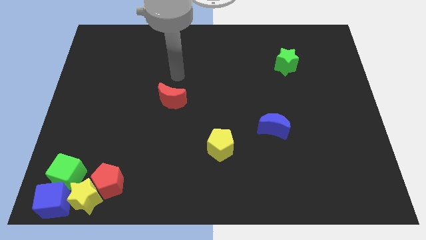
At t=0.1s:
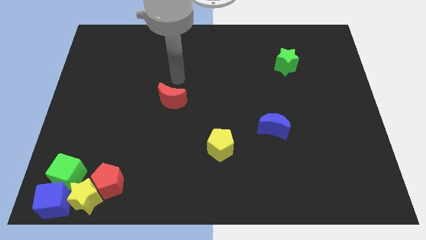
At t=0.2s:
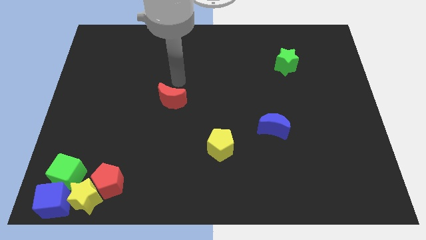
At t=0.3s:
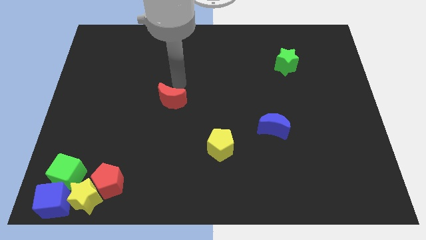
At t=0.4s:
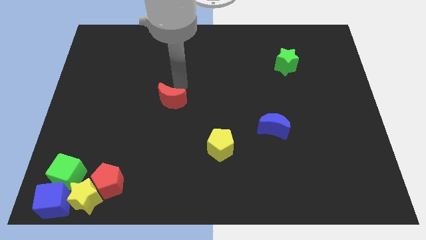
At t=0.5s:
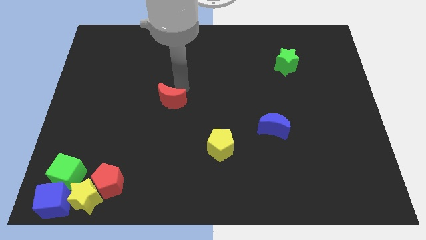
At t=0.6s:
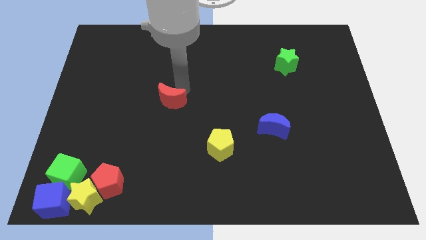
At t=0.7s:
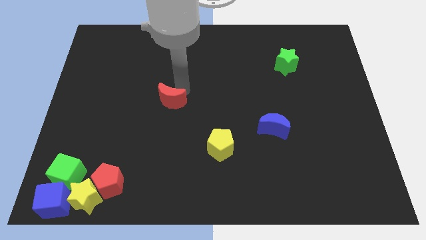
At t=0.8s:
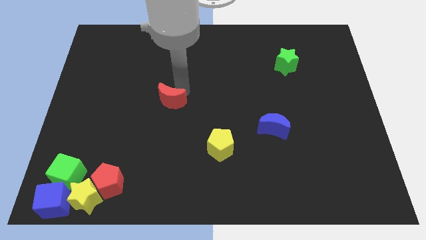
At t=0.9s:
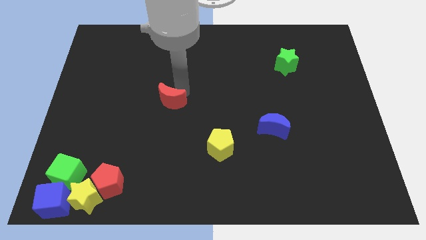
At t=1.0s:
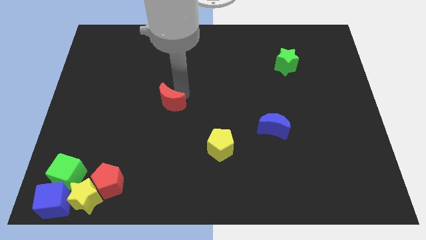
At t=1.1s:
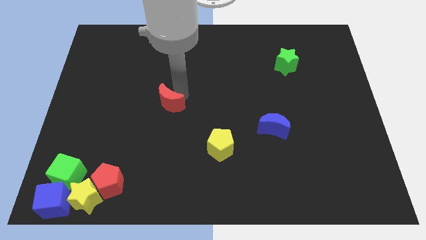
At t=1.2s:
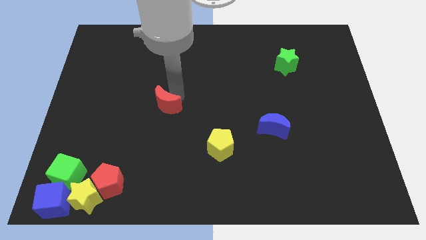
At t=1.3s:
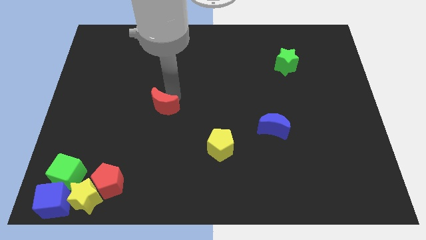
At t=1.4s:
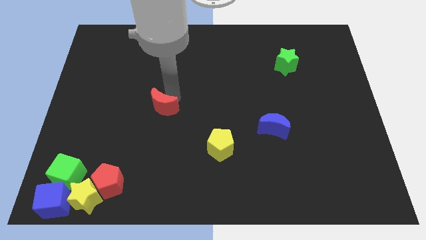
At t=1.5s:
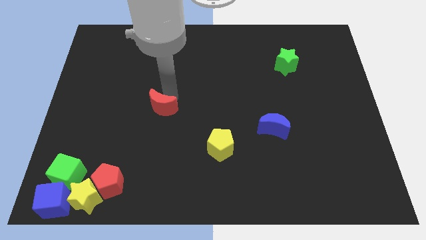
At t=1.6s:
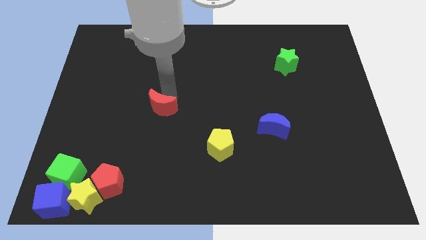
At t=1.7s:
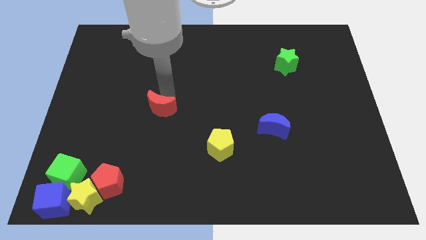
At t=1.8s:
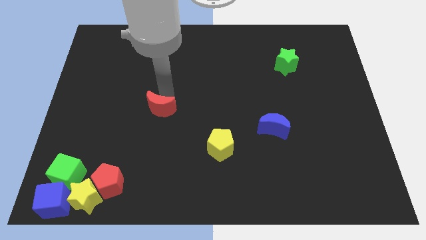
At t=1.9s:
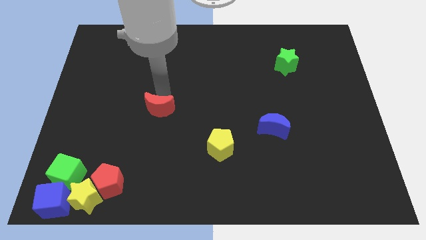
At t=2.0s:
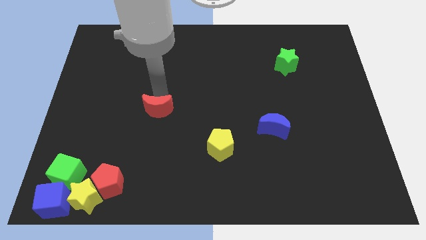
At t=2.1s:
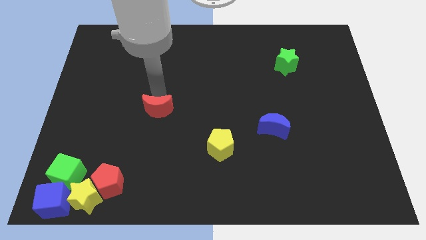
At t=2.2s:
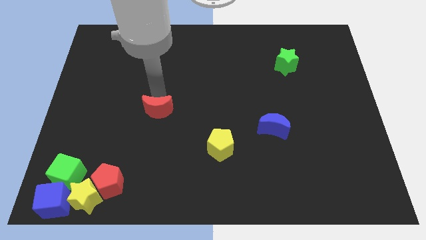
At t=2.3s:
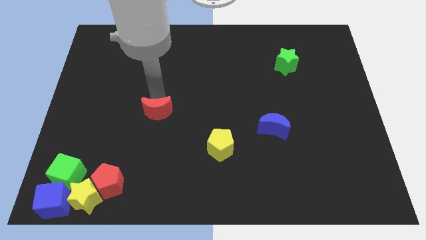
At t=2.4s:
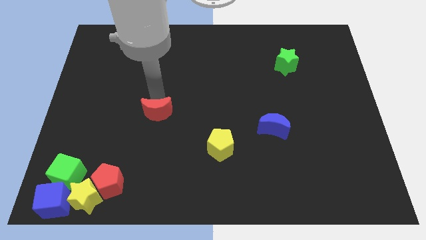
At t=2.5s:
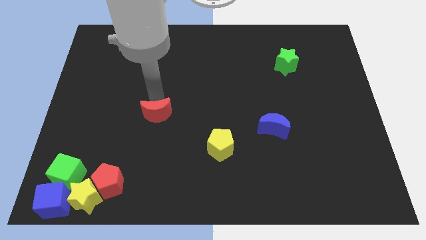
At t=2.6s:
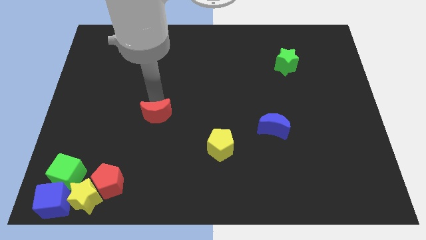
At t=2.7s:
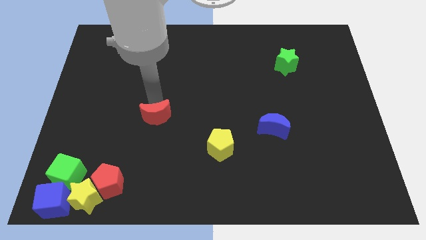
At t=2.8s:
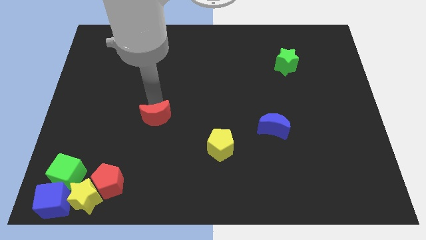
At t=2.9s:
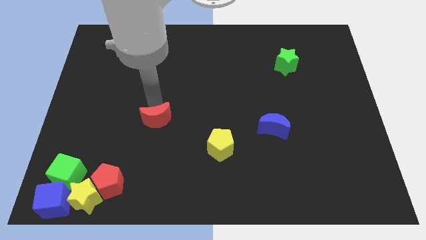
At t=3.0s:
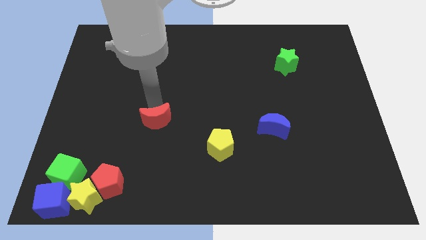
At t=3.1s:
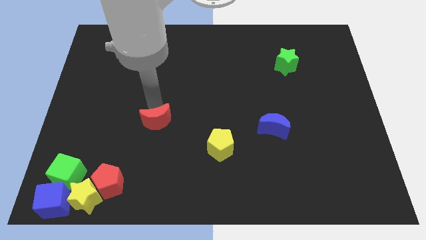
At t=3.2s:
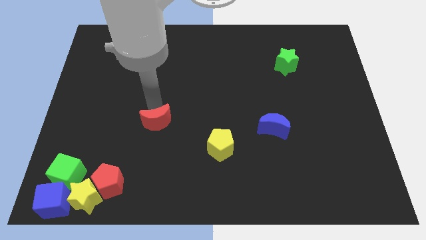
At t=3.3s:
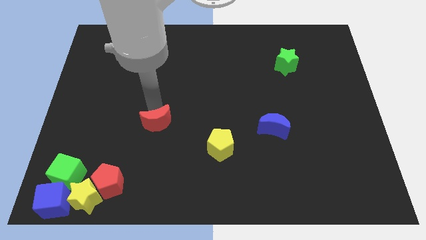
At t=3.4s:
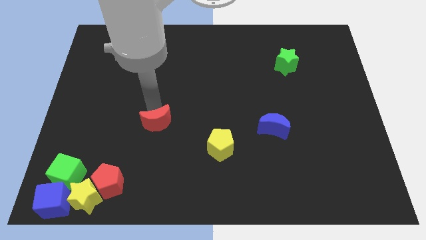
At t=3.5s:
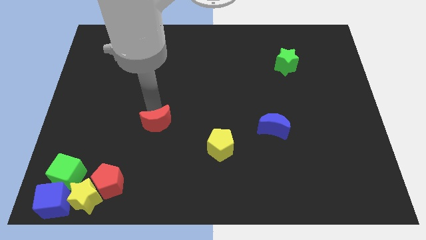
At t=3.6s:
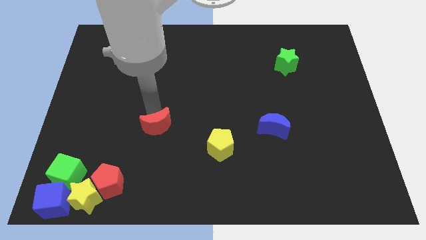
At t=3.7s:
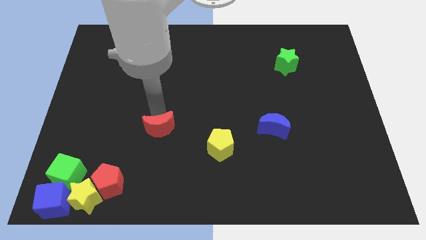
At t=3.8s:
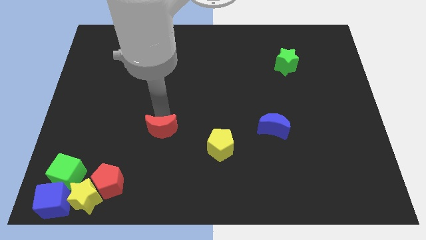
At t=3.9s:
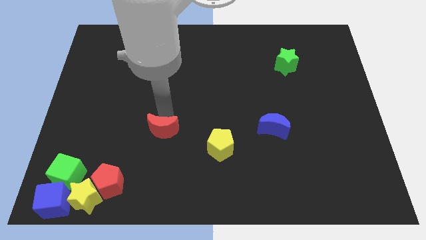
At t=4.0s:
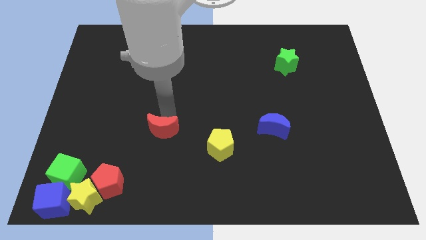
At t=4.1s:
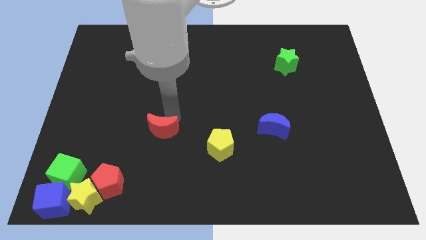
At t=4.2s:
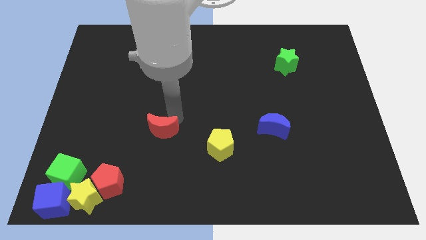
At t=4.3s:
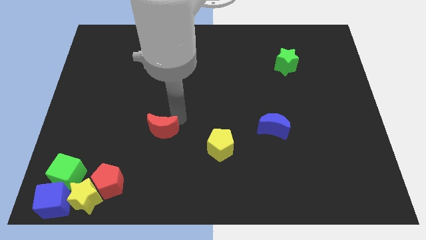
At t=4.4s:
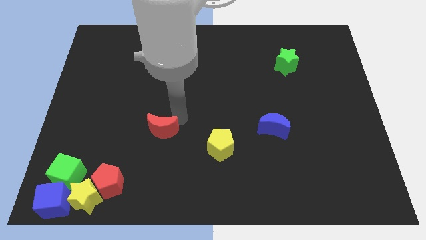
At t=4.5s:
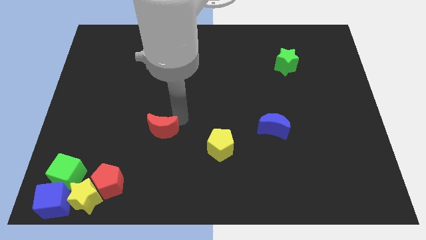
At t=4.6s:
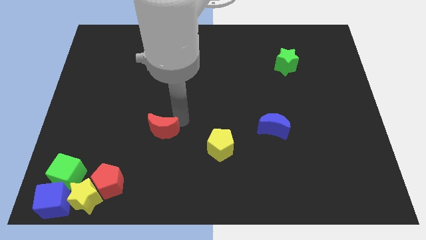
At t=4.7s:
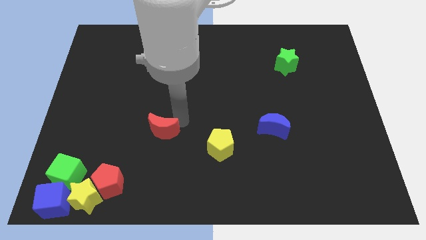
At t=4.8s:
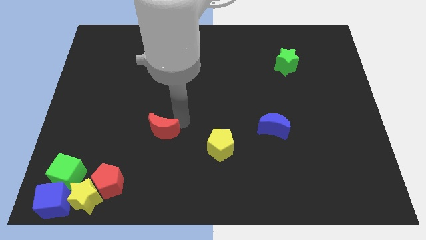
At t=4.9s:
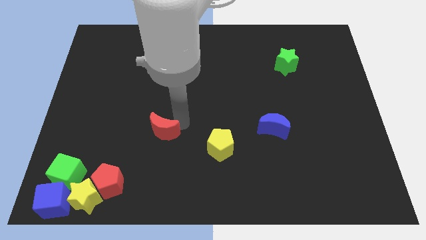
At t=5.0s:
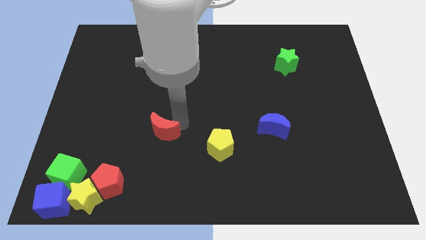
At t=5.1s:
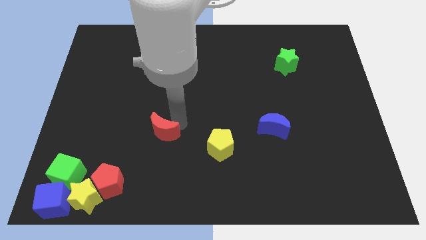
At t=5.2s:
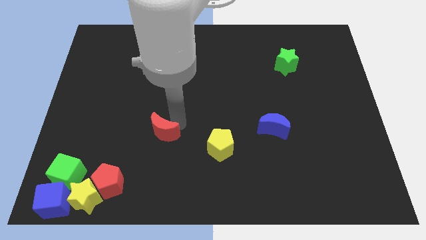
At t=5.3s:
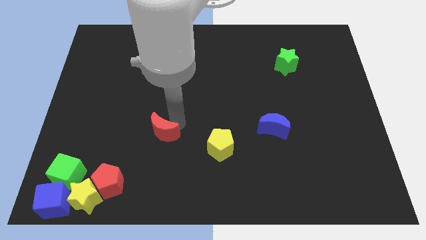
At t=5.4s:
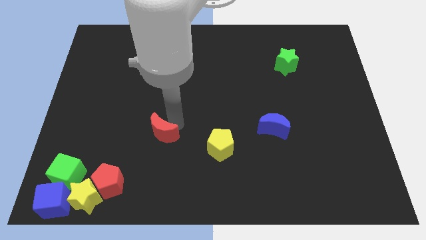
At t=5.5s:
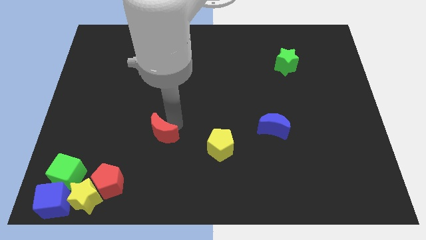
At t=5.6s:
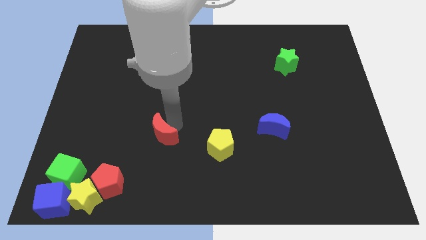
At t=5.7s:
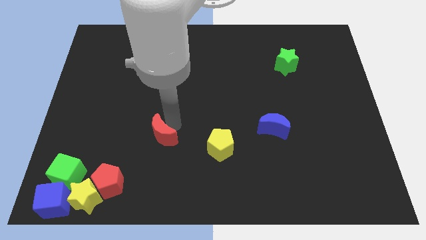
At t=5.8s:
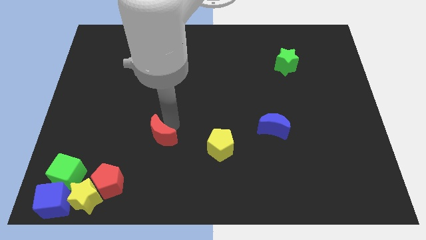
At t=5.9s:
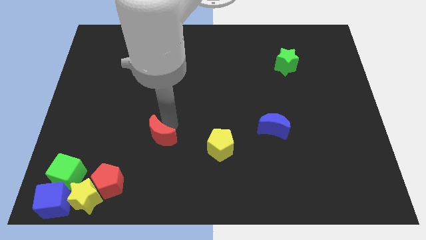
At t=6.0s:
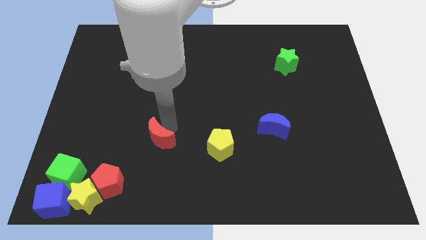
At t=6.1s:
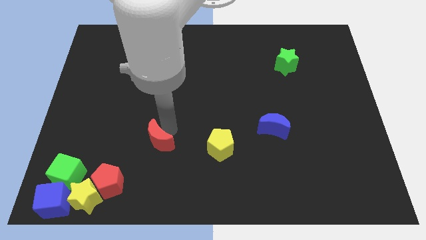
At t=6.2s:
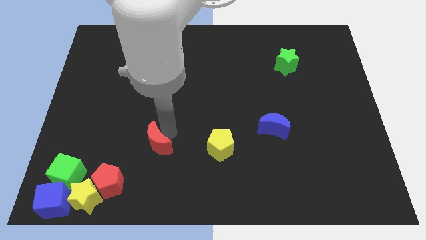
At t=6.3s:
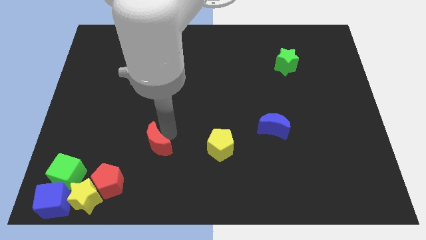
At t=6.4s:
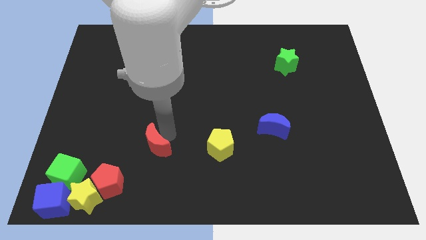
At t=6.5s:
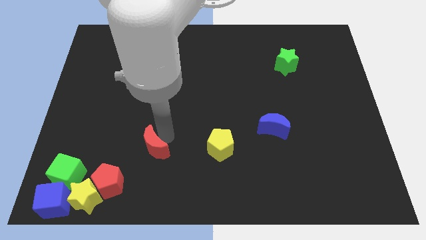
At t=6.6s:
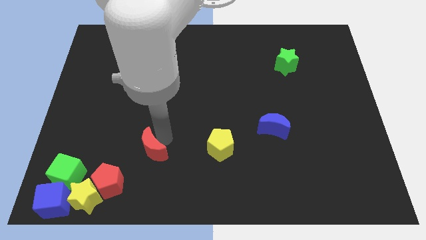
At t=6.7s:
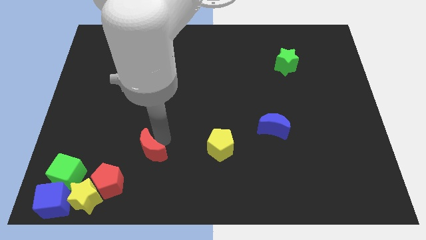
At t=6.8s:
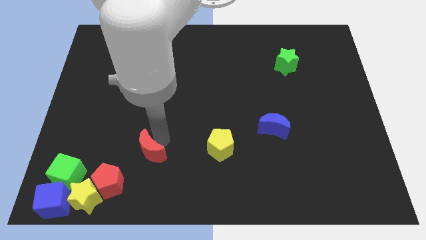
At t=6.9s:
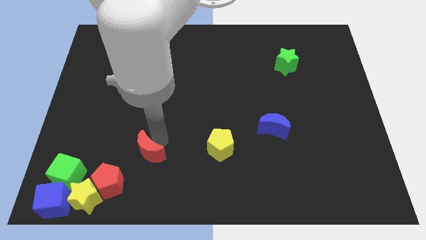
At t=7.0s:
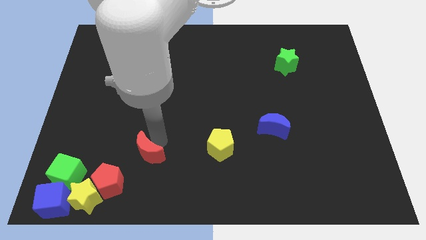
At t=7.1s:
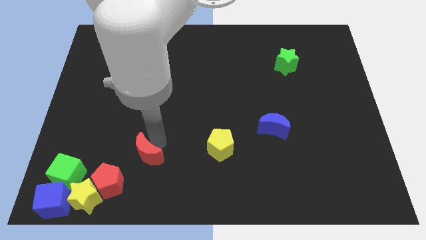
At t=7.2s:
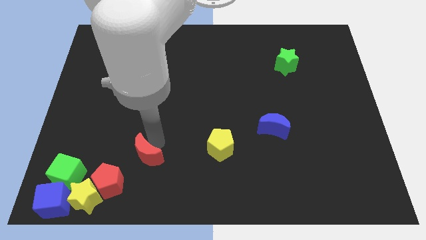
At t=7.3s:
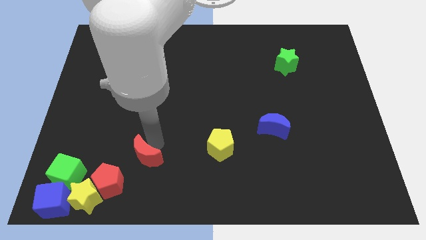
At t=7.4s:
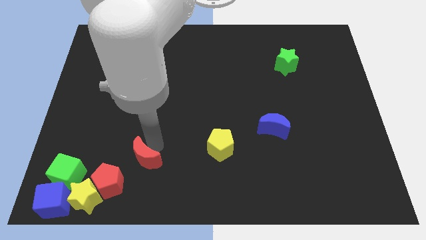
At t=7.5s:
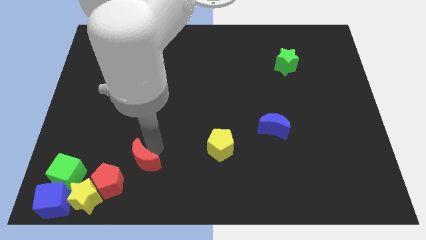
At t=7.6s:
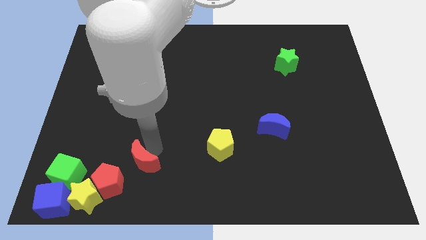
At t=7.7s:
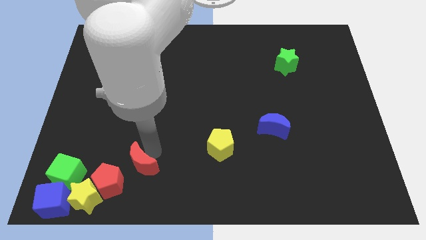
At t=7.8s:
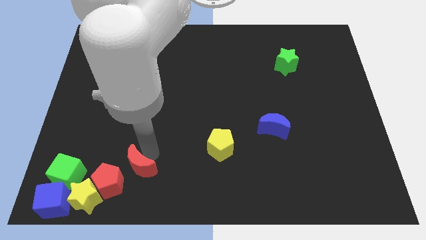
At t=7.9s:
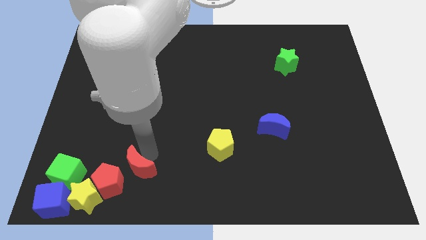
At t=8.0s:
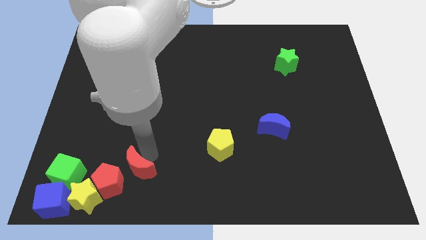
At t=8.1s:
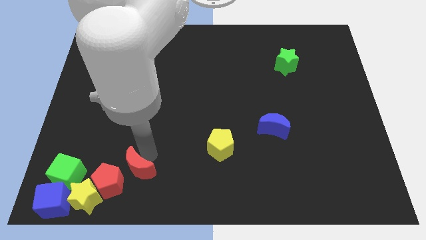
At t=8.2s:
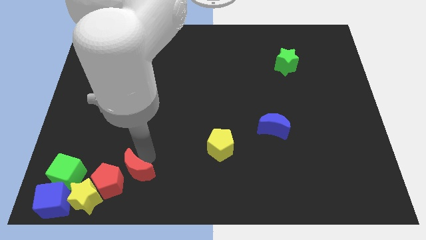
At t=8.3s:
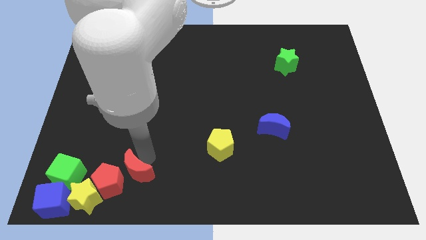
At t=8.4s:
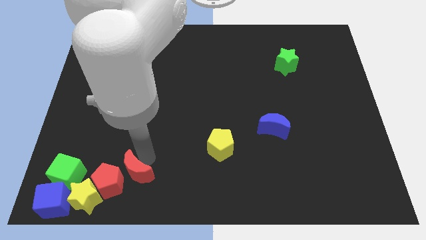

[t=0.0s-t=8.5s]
slide the red moon close to the red pentagon

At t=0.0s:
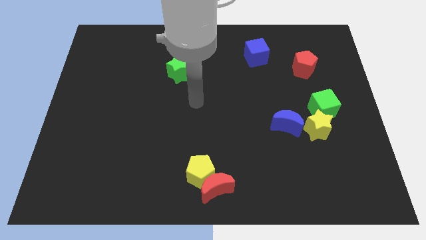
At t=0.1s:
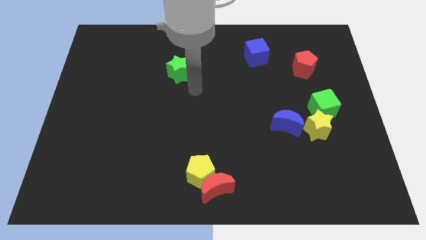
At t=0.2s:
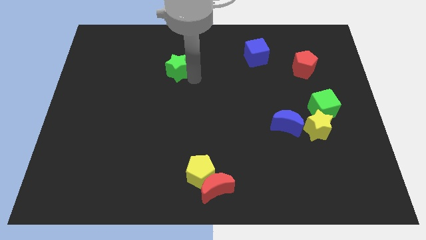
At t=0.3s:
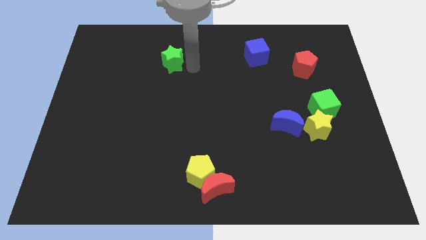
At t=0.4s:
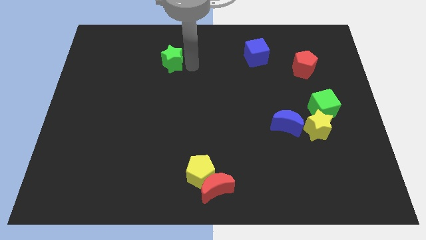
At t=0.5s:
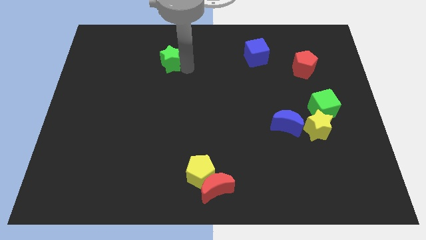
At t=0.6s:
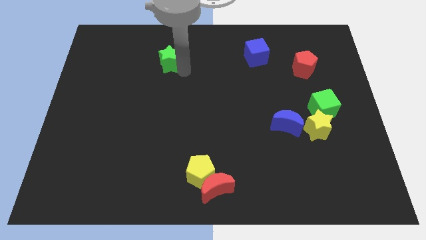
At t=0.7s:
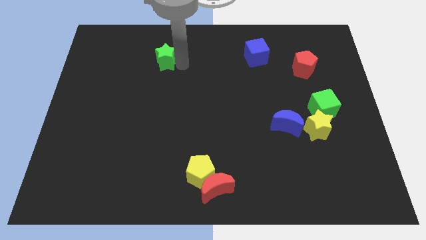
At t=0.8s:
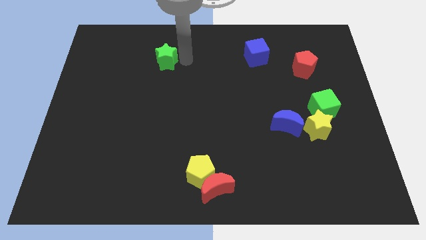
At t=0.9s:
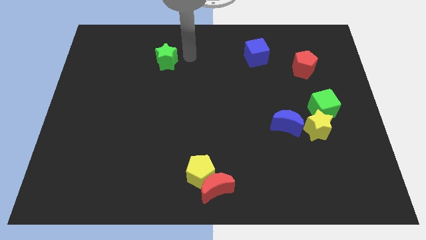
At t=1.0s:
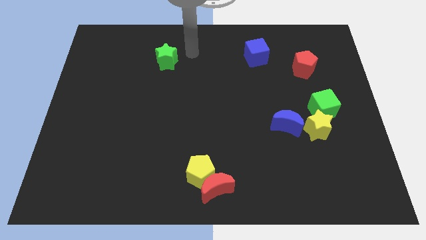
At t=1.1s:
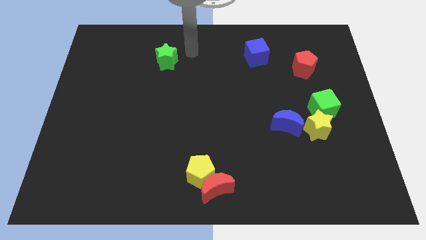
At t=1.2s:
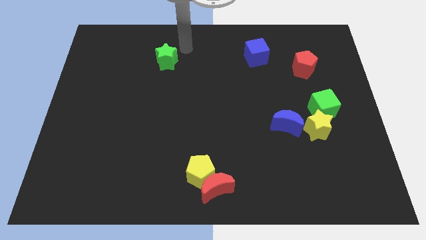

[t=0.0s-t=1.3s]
place the green star parallel to the left of the blue cube
